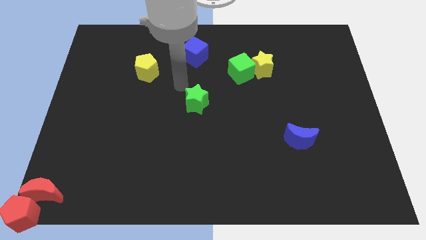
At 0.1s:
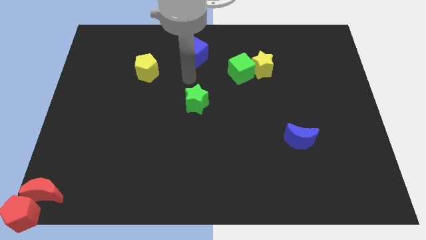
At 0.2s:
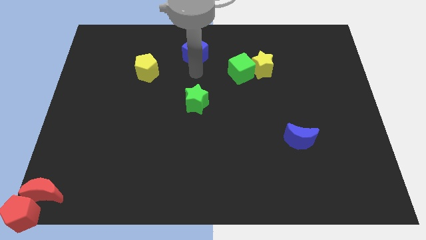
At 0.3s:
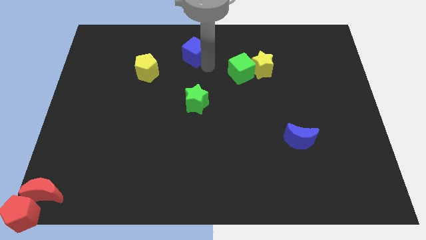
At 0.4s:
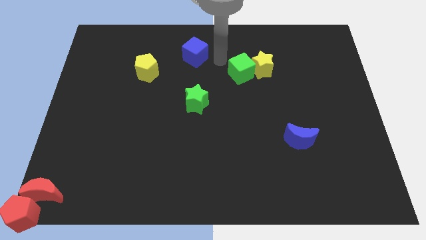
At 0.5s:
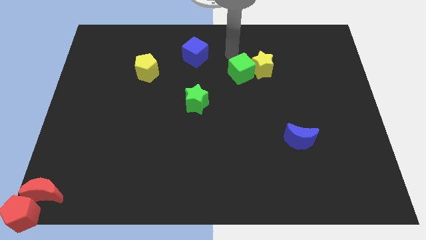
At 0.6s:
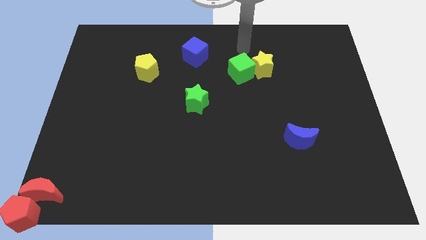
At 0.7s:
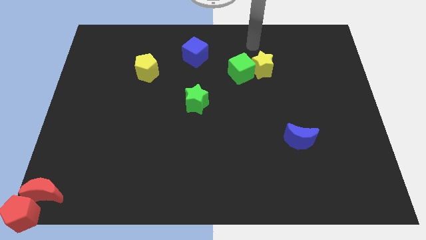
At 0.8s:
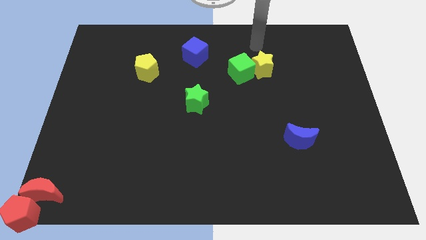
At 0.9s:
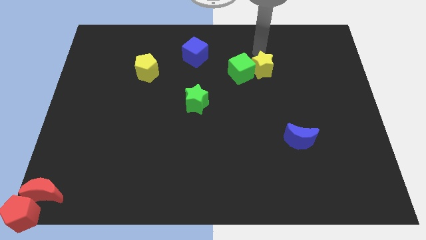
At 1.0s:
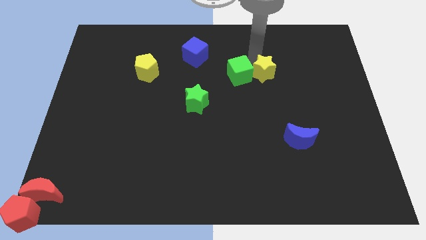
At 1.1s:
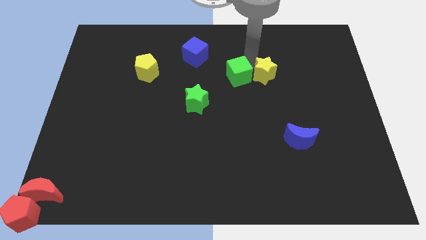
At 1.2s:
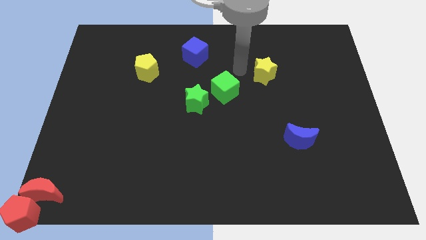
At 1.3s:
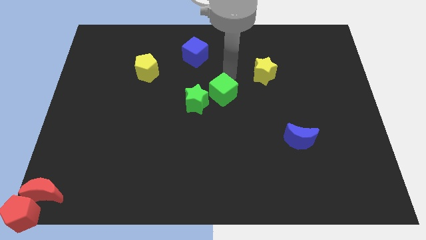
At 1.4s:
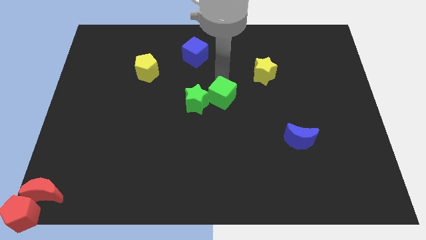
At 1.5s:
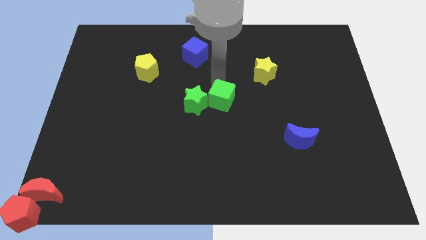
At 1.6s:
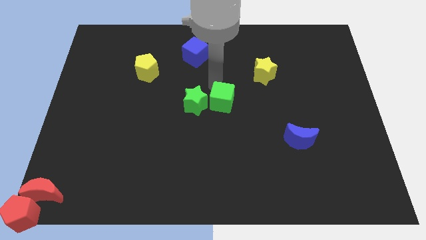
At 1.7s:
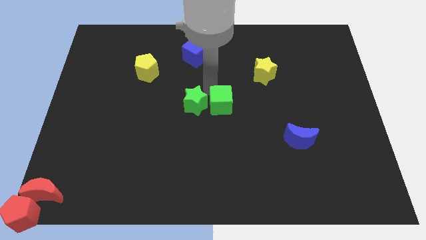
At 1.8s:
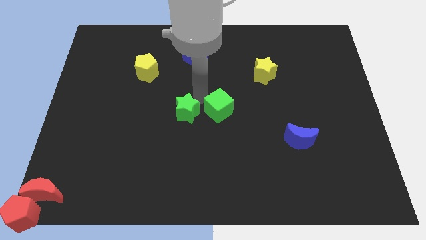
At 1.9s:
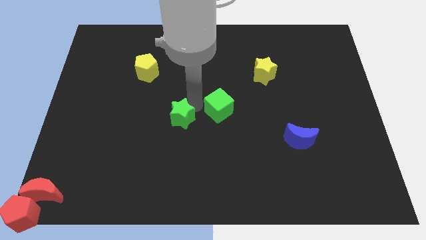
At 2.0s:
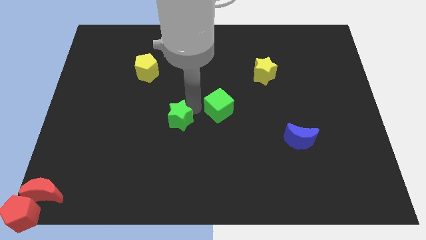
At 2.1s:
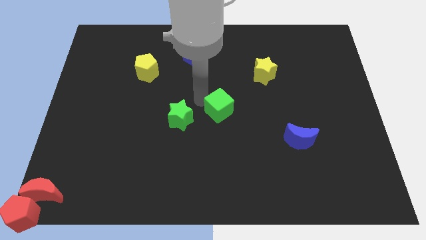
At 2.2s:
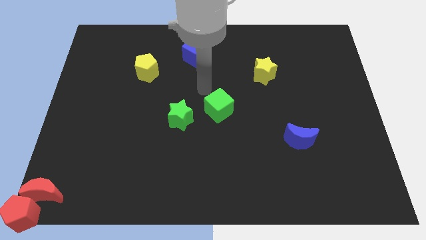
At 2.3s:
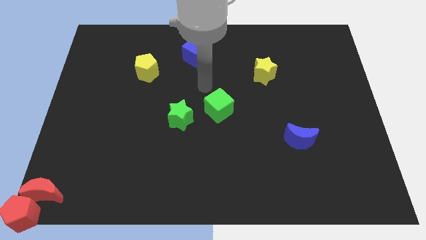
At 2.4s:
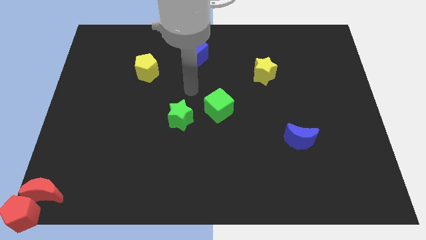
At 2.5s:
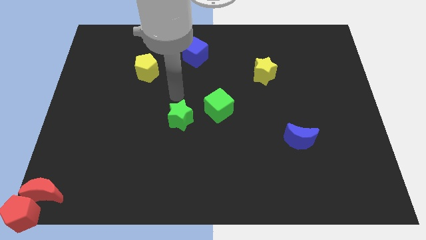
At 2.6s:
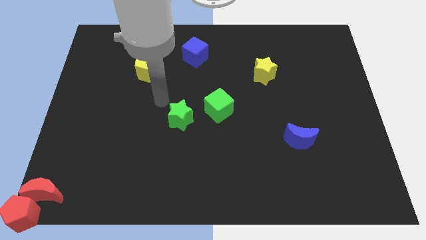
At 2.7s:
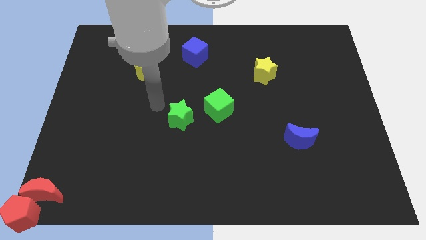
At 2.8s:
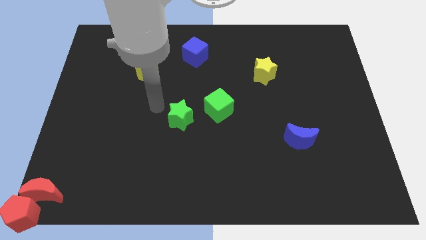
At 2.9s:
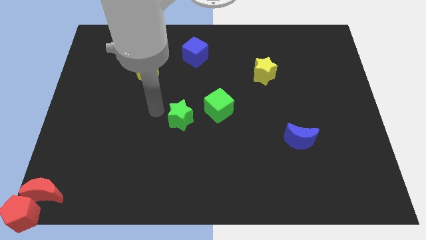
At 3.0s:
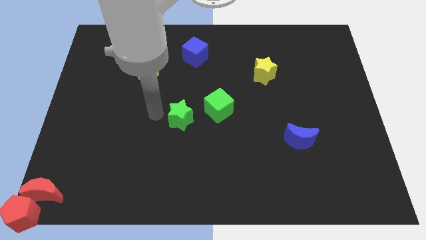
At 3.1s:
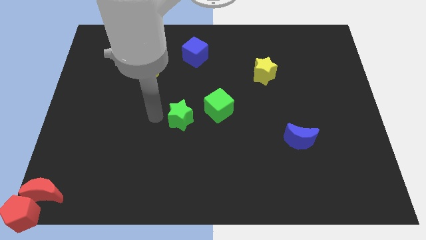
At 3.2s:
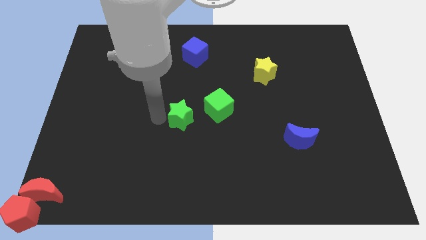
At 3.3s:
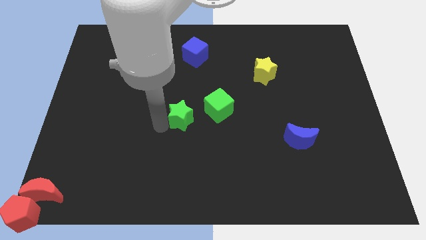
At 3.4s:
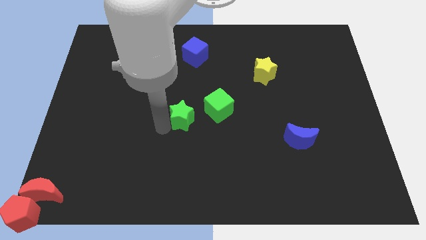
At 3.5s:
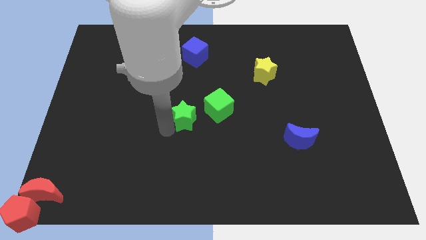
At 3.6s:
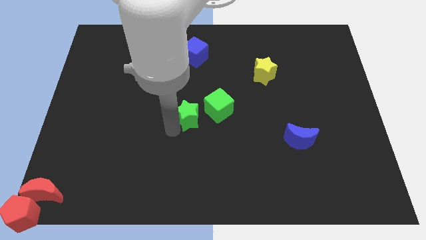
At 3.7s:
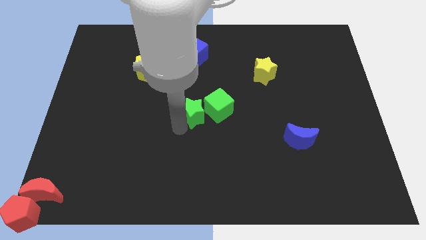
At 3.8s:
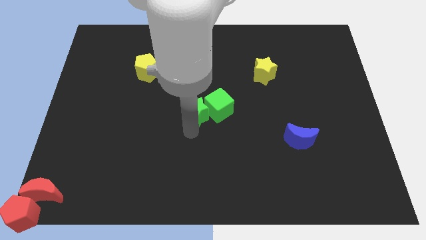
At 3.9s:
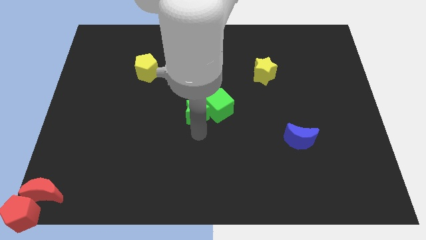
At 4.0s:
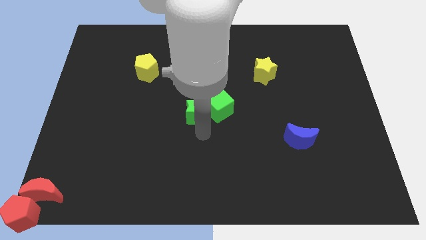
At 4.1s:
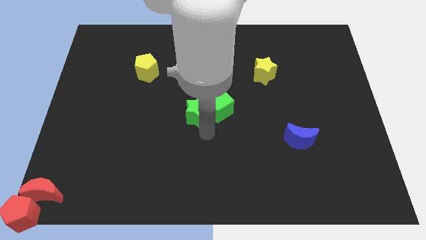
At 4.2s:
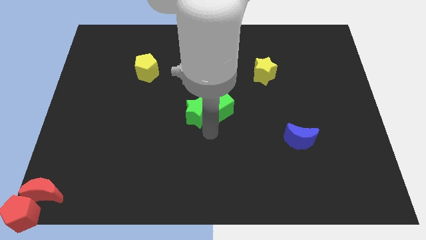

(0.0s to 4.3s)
push the green star into the green cube

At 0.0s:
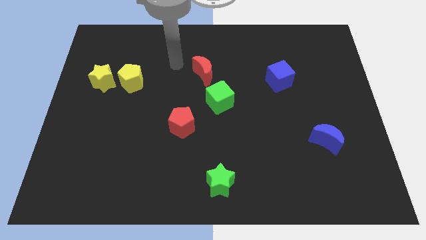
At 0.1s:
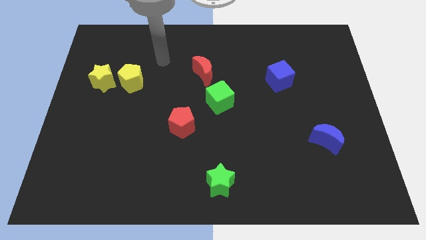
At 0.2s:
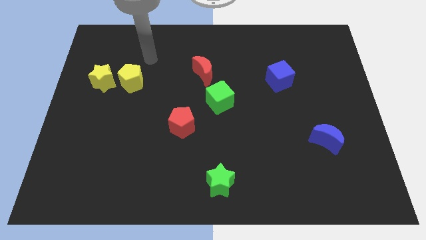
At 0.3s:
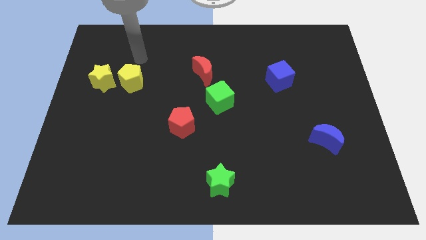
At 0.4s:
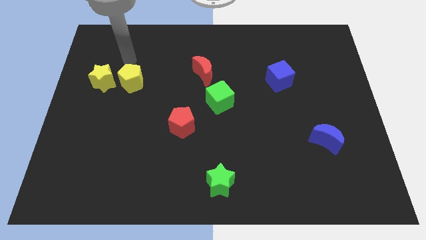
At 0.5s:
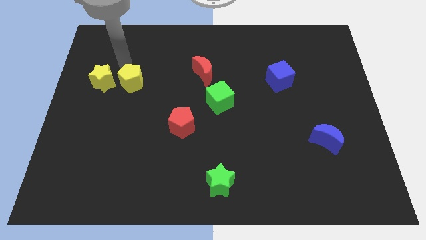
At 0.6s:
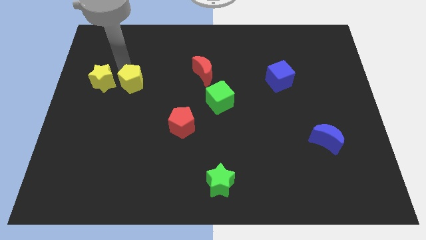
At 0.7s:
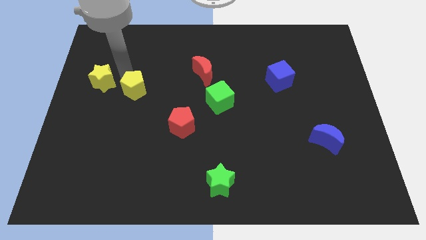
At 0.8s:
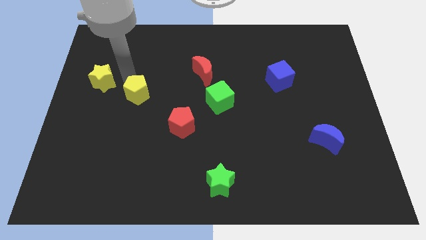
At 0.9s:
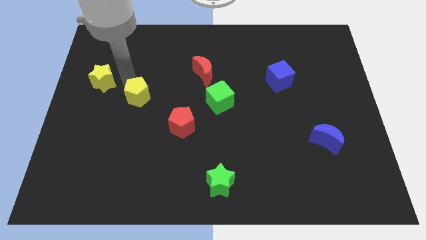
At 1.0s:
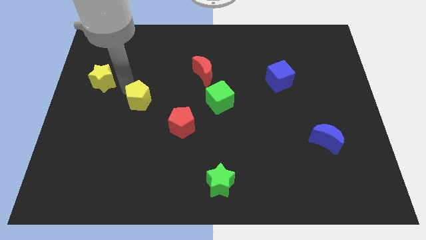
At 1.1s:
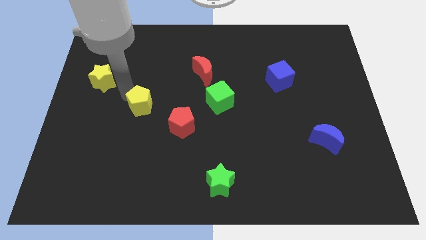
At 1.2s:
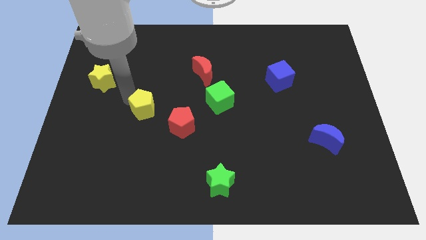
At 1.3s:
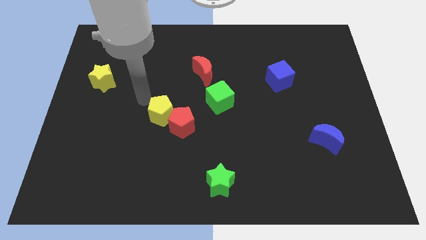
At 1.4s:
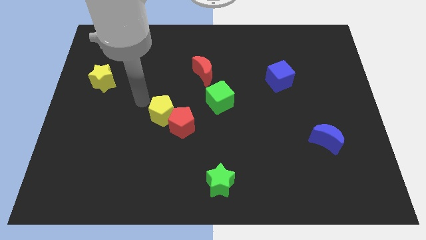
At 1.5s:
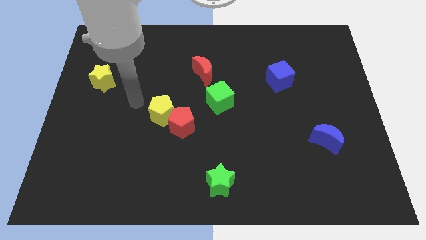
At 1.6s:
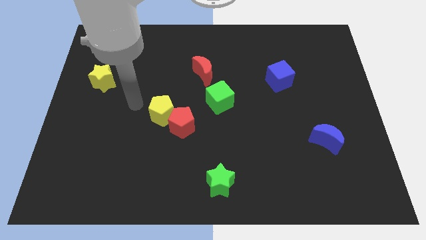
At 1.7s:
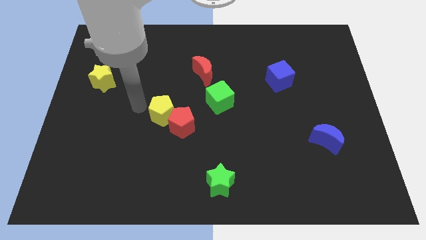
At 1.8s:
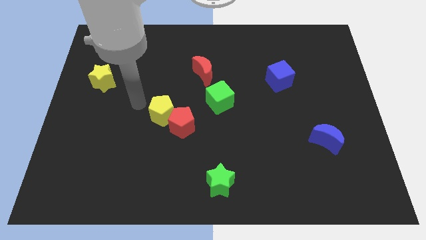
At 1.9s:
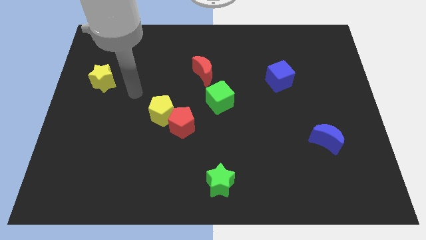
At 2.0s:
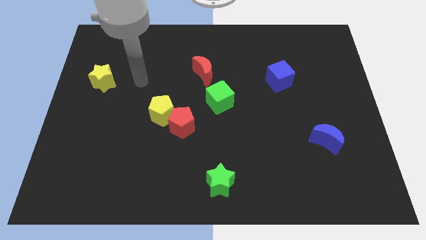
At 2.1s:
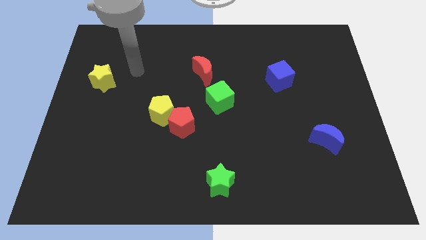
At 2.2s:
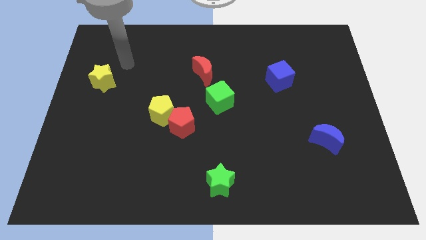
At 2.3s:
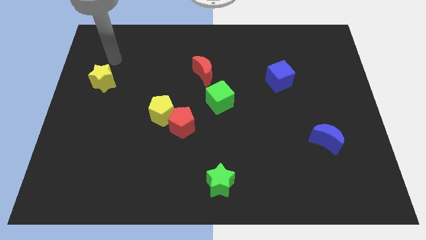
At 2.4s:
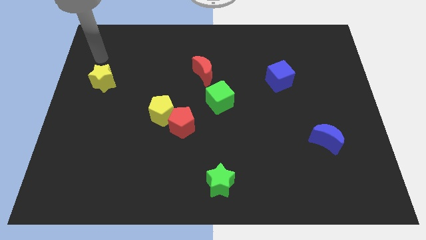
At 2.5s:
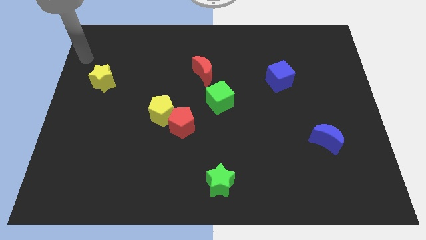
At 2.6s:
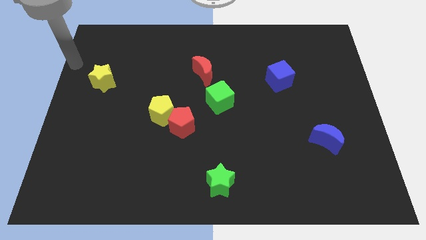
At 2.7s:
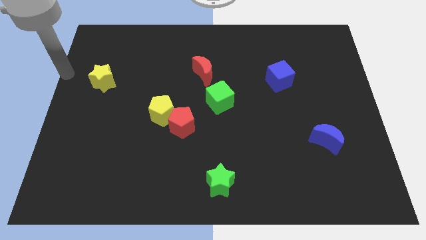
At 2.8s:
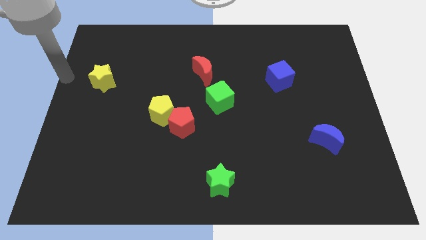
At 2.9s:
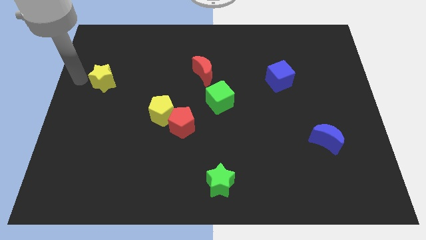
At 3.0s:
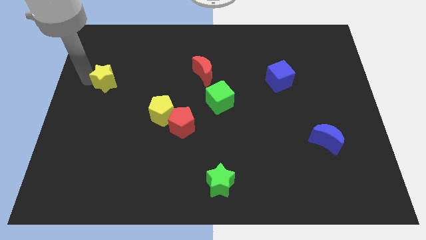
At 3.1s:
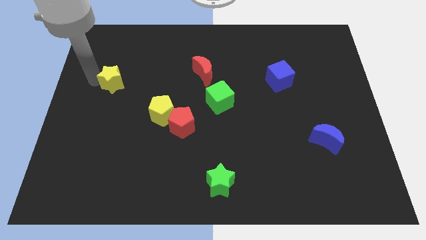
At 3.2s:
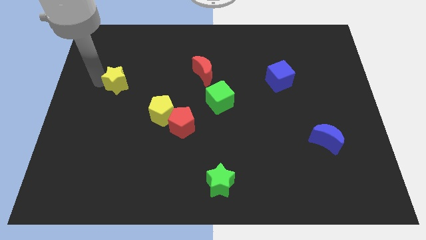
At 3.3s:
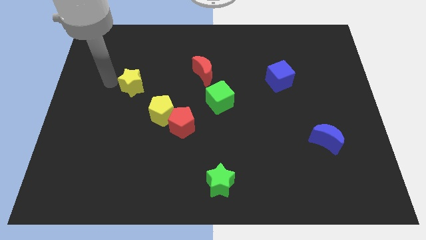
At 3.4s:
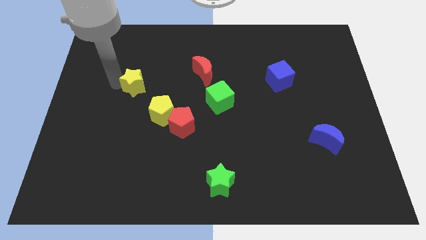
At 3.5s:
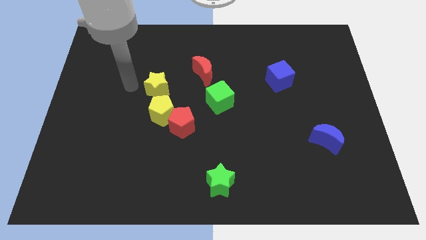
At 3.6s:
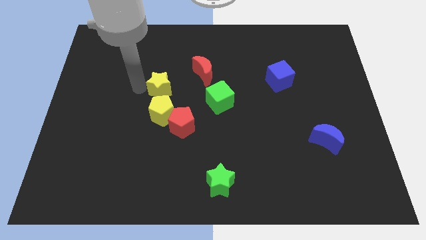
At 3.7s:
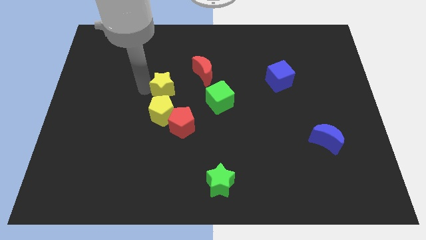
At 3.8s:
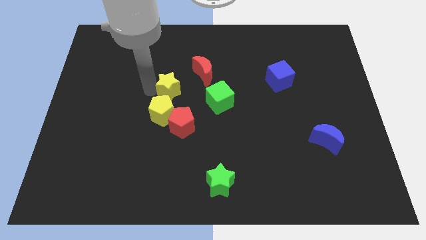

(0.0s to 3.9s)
put the yellow star and yellow pentagon in a line vertically

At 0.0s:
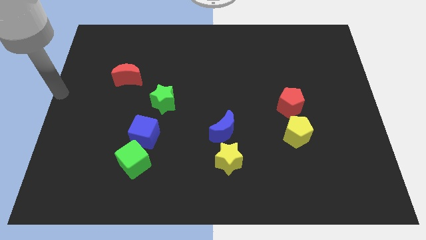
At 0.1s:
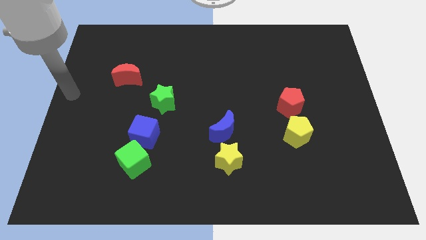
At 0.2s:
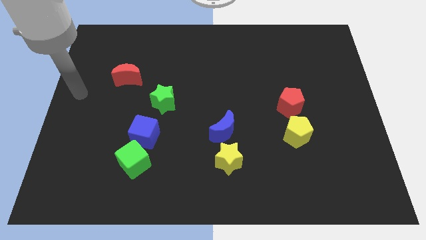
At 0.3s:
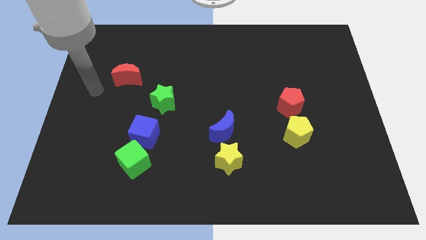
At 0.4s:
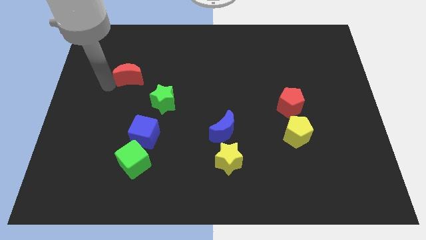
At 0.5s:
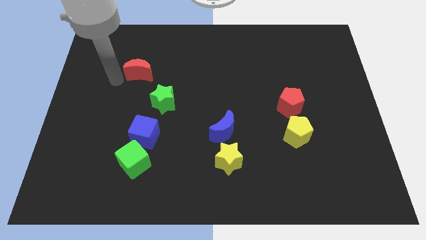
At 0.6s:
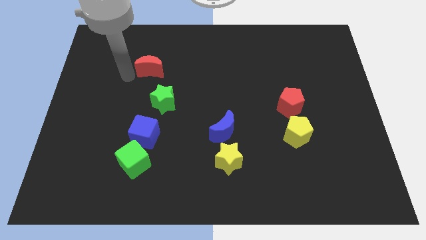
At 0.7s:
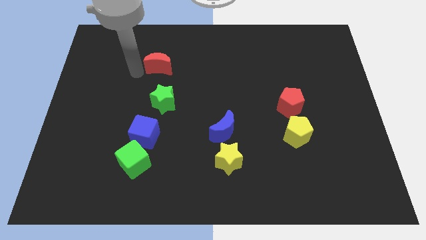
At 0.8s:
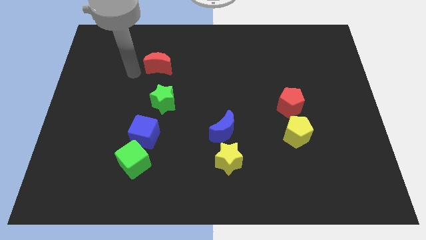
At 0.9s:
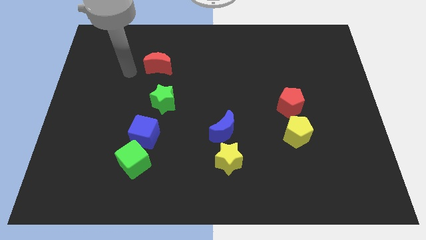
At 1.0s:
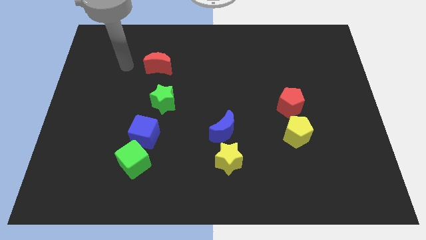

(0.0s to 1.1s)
place red moon to the top of green star
